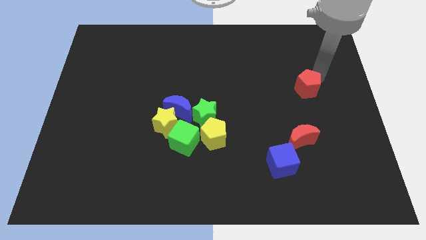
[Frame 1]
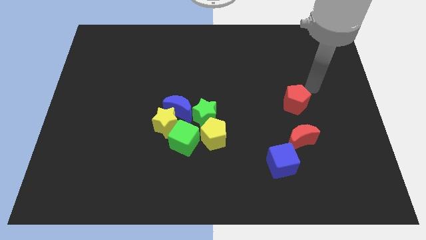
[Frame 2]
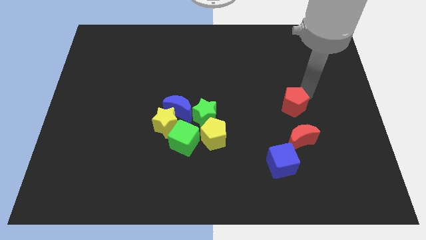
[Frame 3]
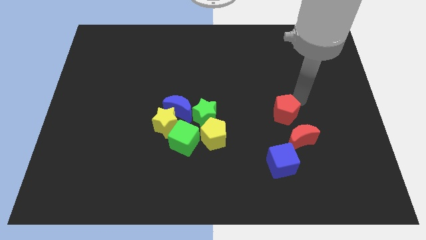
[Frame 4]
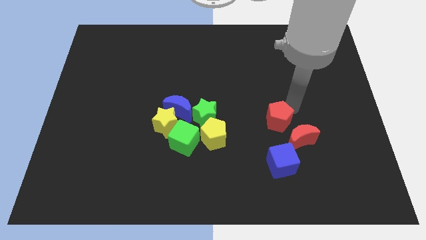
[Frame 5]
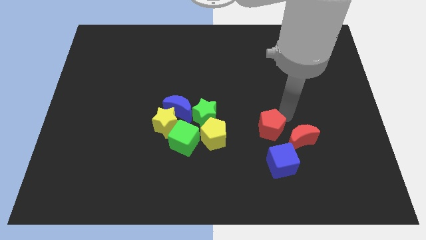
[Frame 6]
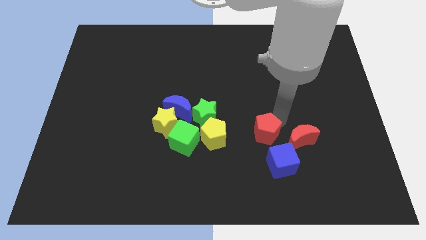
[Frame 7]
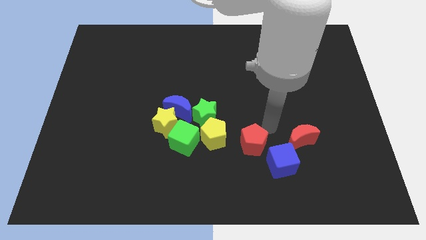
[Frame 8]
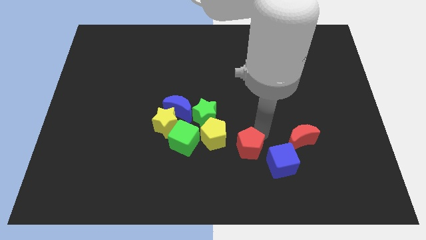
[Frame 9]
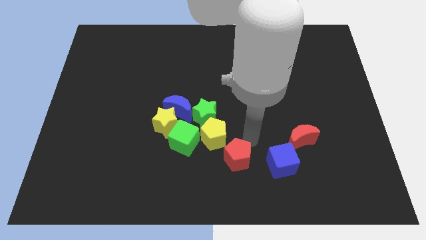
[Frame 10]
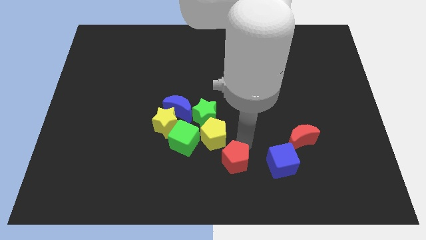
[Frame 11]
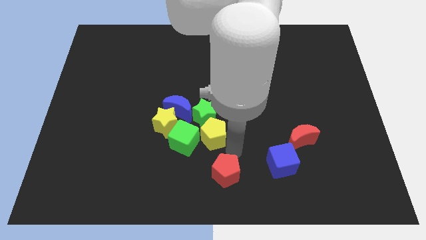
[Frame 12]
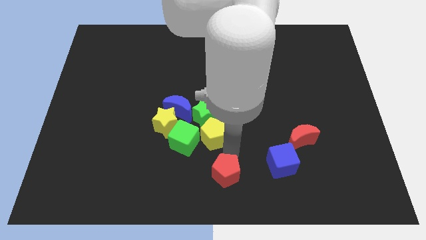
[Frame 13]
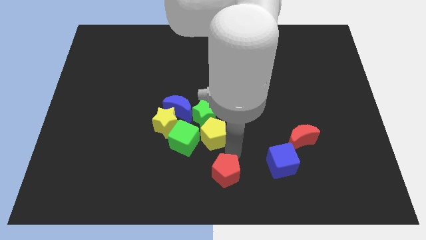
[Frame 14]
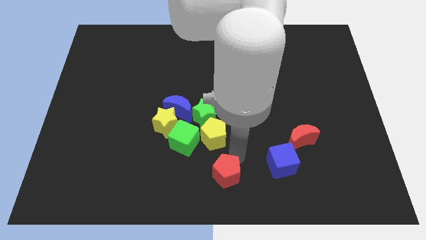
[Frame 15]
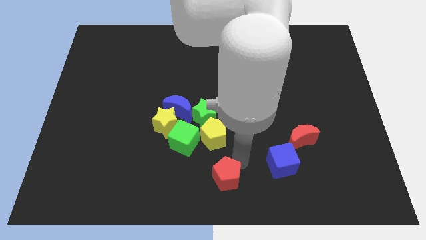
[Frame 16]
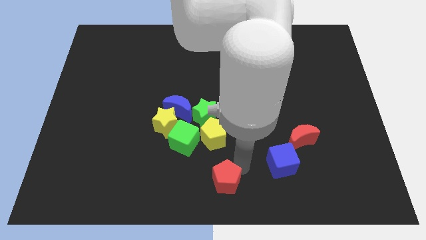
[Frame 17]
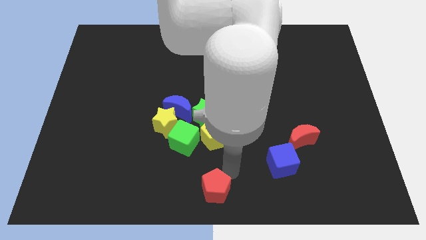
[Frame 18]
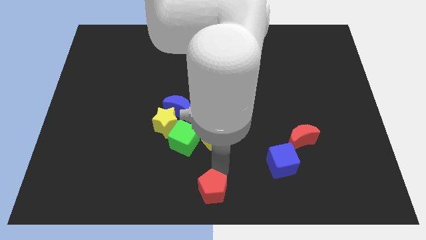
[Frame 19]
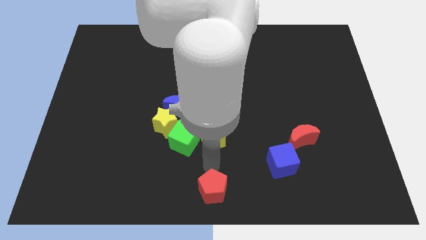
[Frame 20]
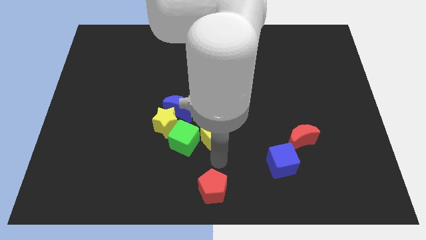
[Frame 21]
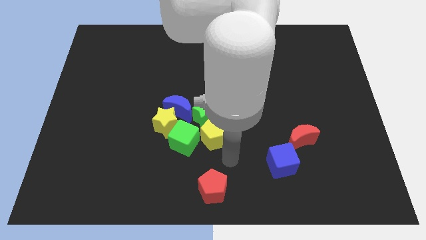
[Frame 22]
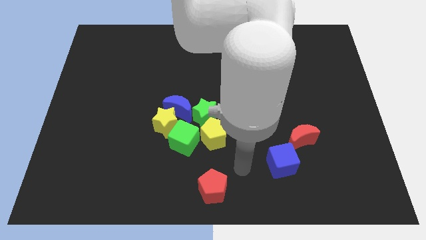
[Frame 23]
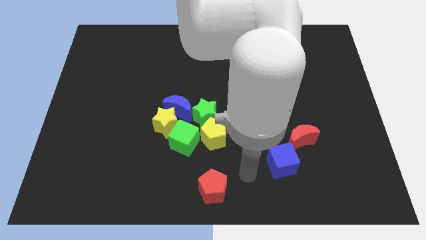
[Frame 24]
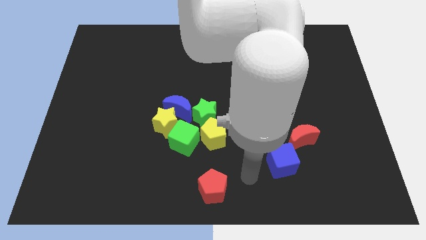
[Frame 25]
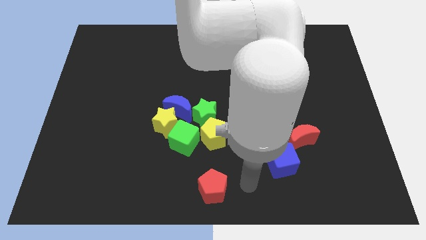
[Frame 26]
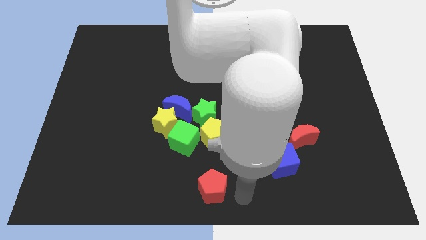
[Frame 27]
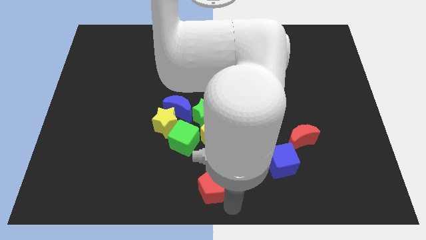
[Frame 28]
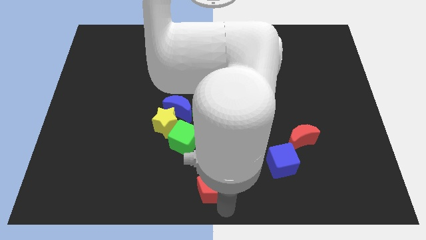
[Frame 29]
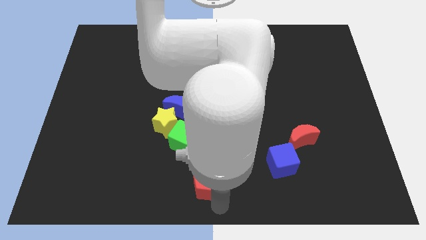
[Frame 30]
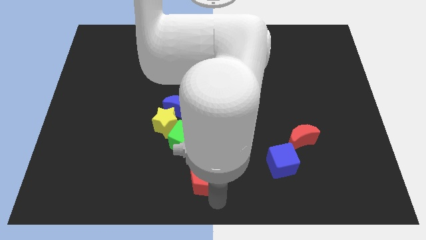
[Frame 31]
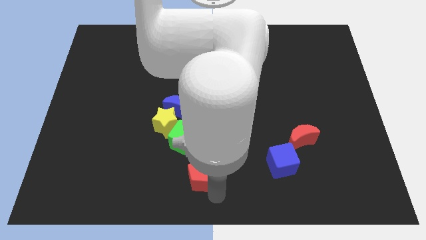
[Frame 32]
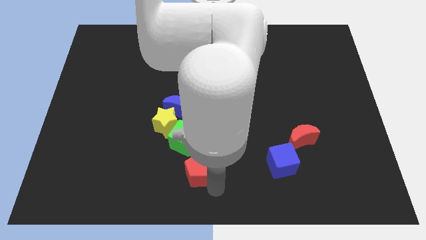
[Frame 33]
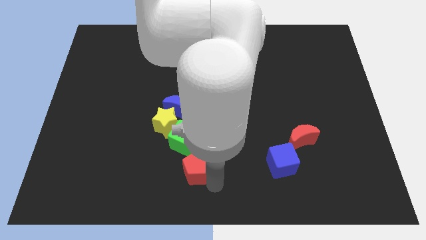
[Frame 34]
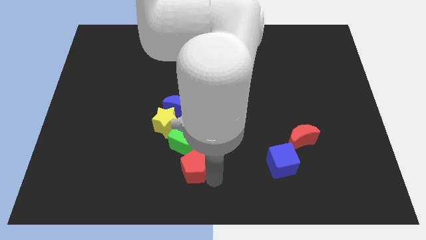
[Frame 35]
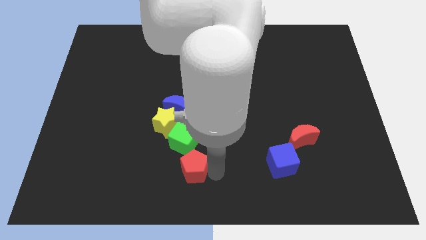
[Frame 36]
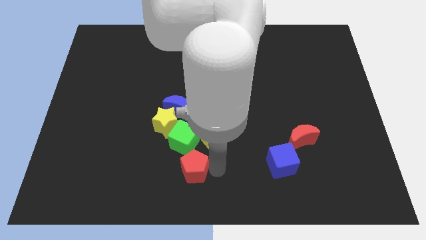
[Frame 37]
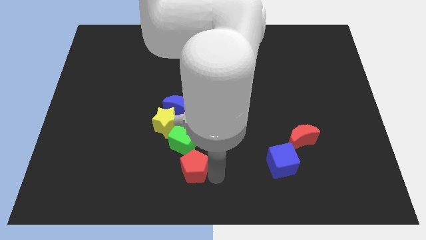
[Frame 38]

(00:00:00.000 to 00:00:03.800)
move the red pentagon close to the green cube

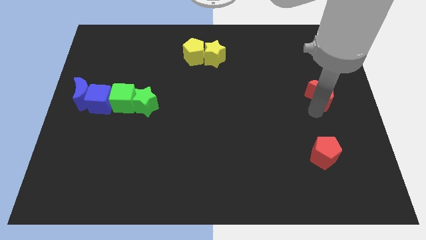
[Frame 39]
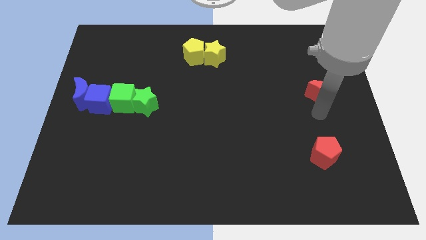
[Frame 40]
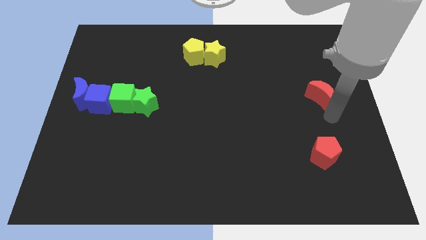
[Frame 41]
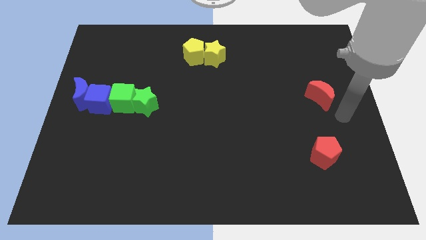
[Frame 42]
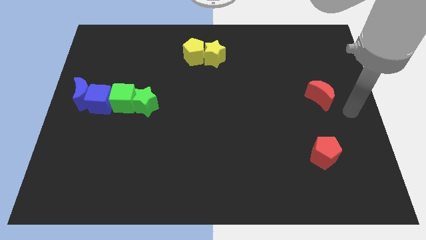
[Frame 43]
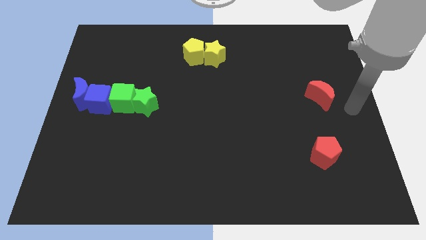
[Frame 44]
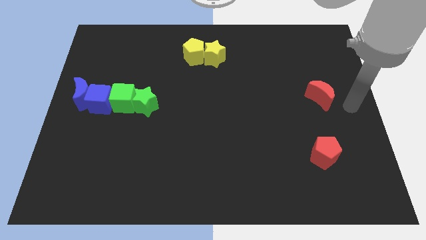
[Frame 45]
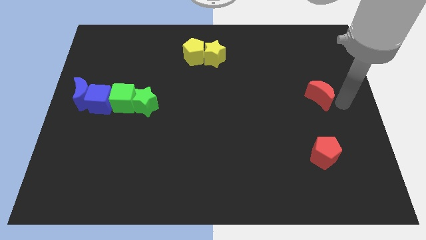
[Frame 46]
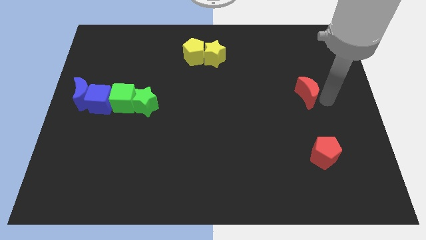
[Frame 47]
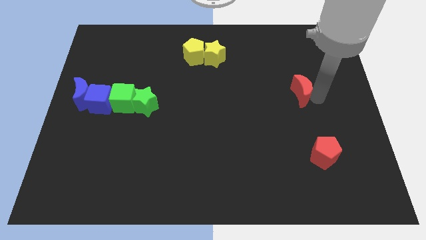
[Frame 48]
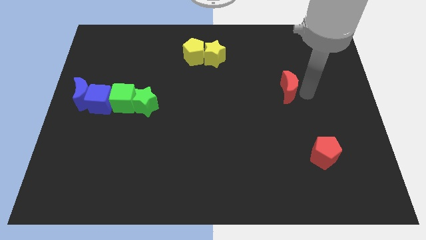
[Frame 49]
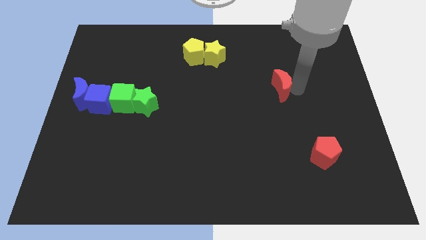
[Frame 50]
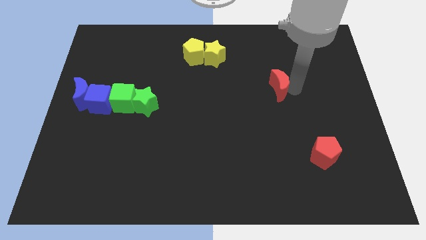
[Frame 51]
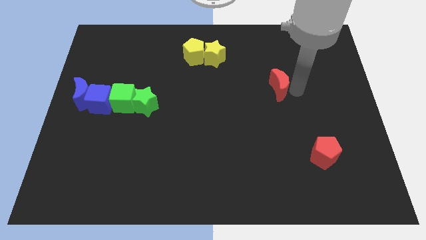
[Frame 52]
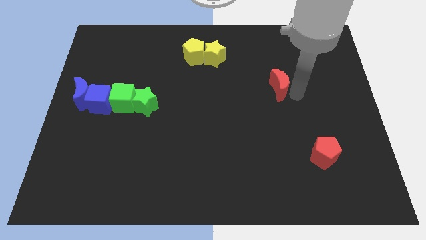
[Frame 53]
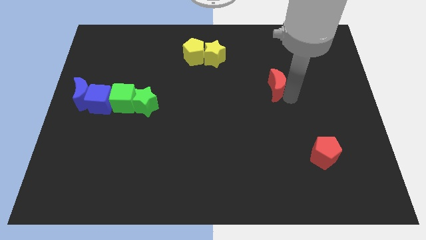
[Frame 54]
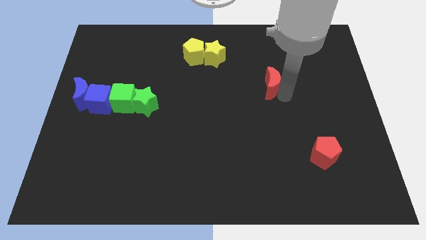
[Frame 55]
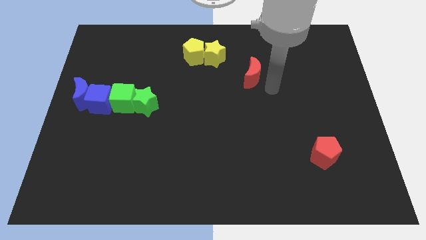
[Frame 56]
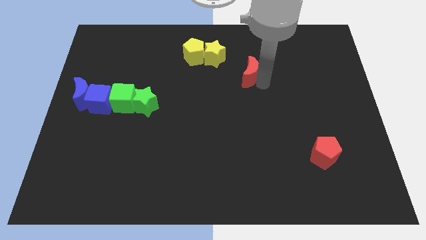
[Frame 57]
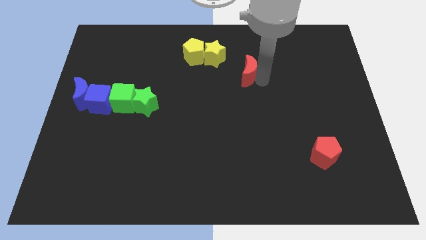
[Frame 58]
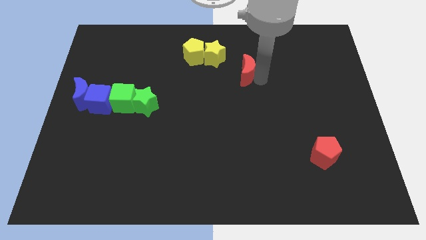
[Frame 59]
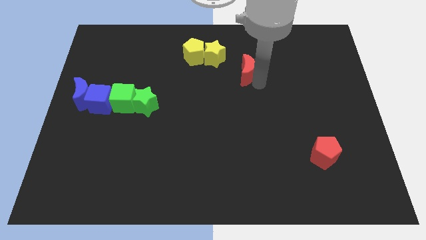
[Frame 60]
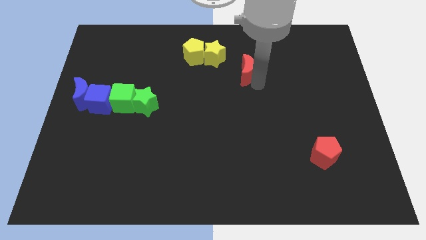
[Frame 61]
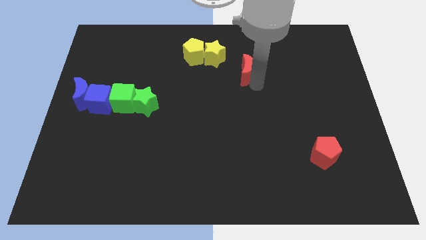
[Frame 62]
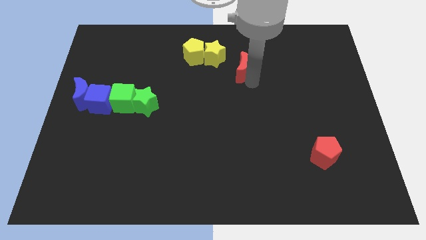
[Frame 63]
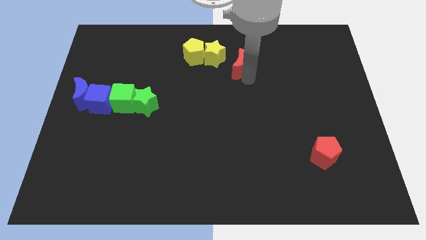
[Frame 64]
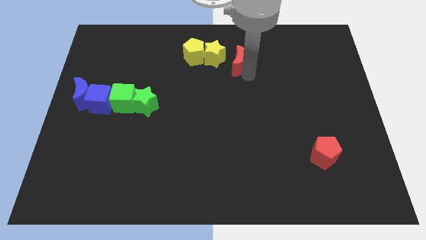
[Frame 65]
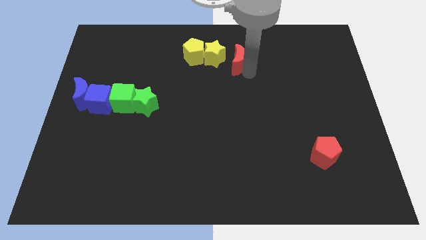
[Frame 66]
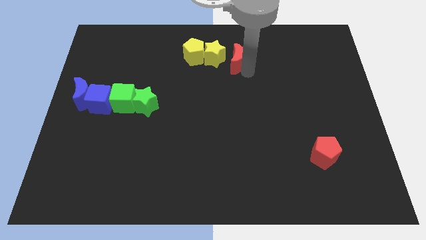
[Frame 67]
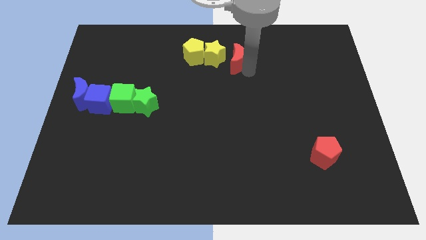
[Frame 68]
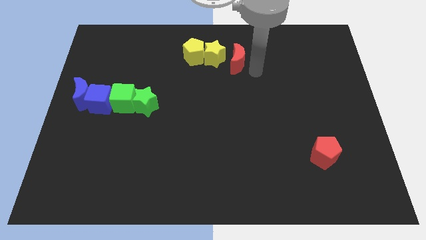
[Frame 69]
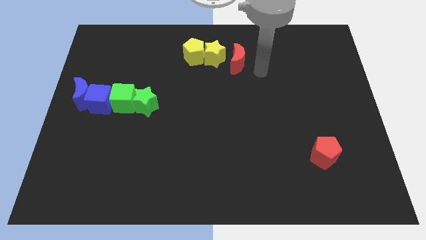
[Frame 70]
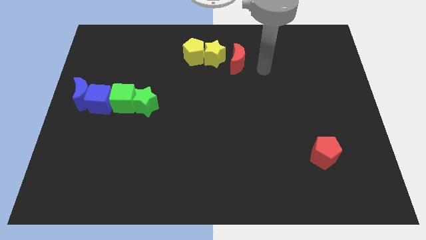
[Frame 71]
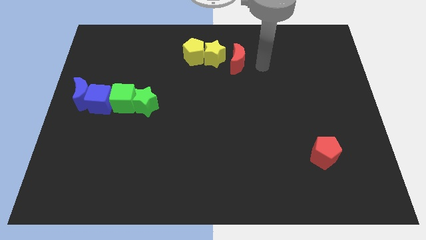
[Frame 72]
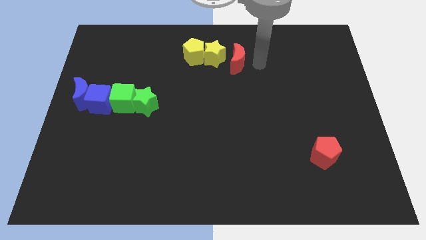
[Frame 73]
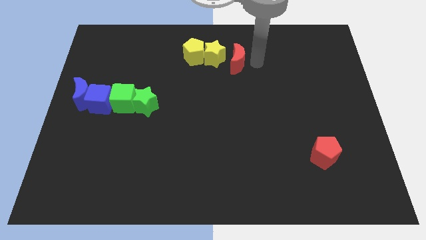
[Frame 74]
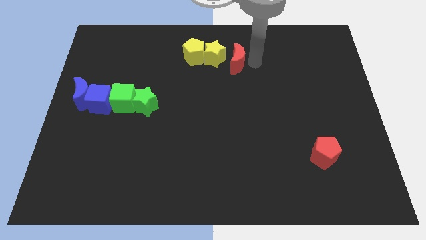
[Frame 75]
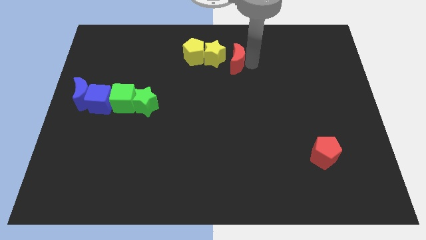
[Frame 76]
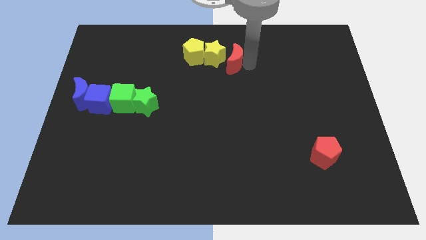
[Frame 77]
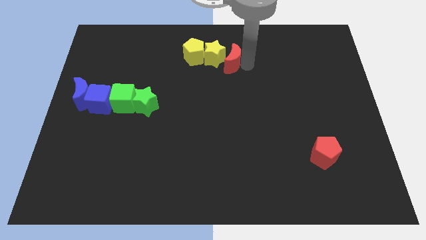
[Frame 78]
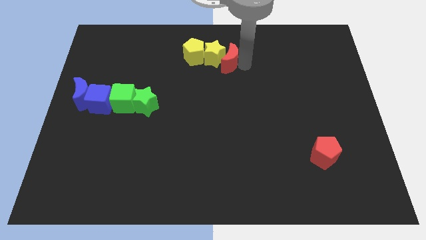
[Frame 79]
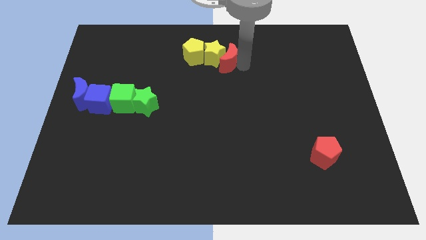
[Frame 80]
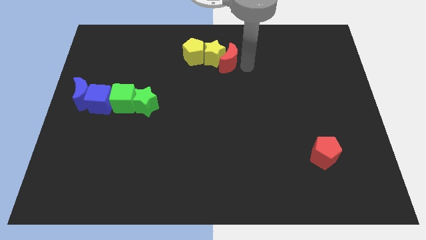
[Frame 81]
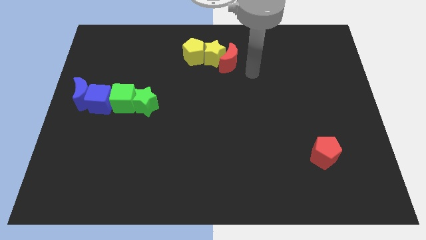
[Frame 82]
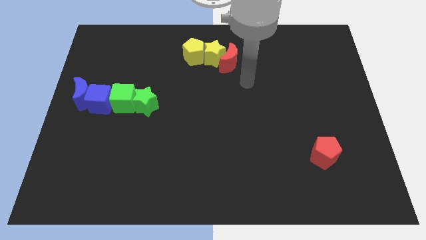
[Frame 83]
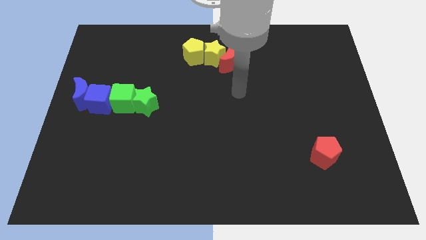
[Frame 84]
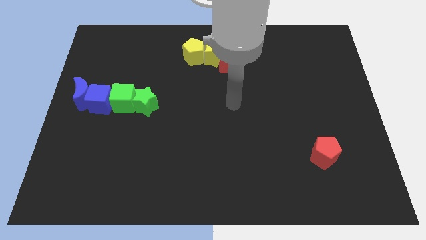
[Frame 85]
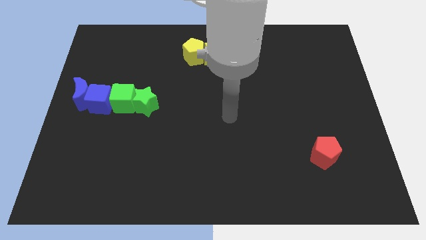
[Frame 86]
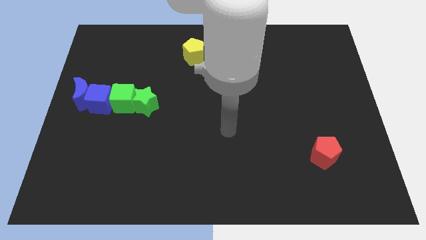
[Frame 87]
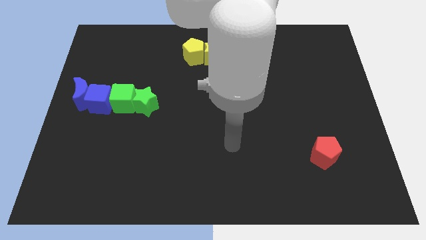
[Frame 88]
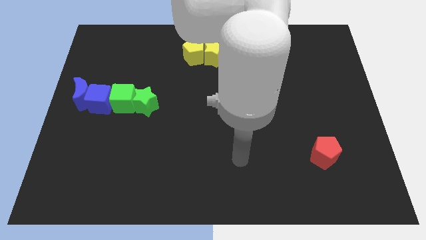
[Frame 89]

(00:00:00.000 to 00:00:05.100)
push red moon into yellow star

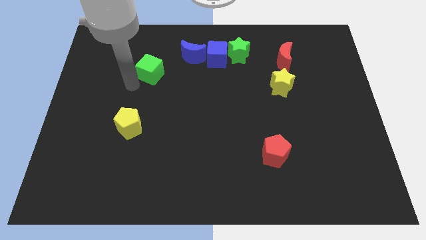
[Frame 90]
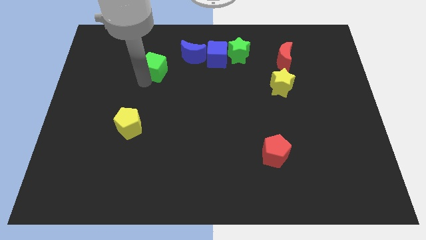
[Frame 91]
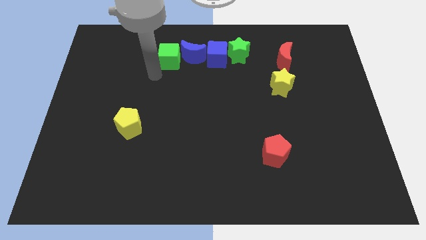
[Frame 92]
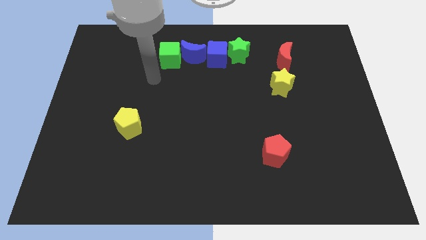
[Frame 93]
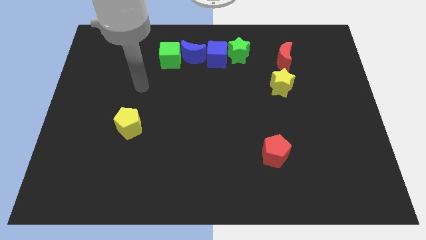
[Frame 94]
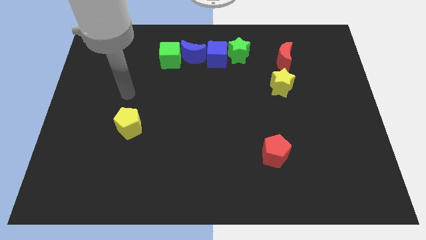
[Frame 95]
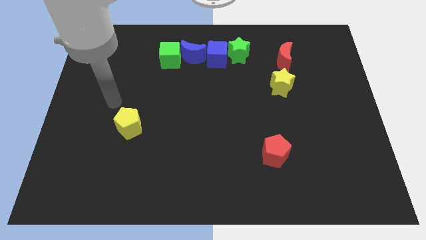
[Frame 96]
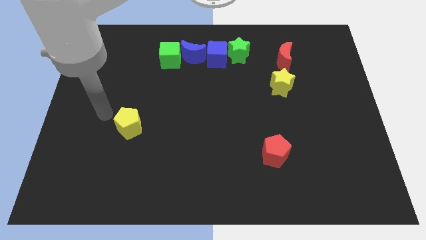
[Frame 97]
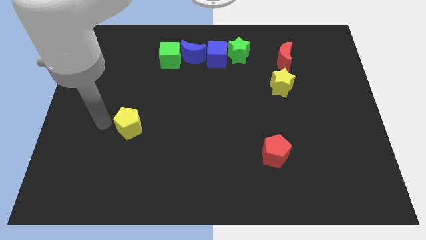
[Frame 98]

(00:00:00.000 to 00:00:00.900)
push the green cube to the left of the blue crescent
